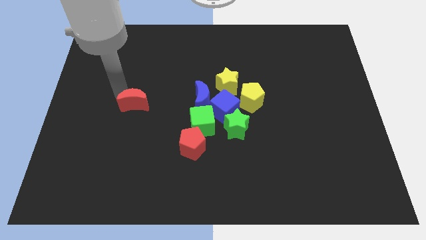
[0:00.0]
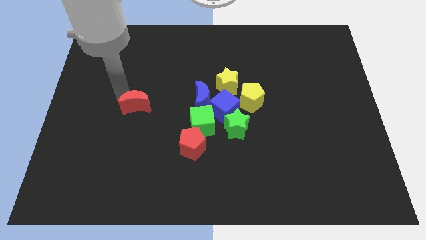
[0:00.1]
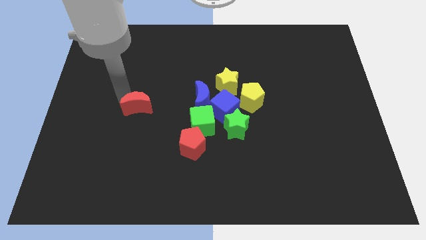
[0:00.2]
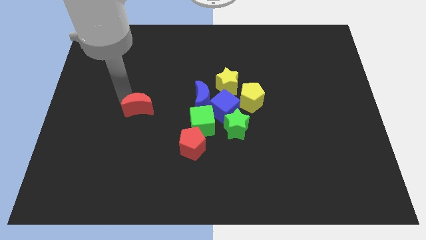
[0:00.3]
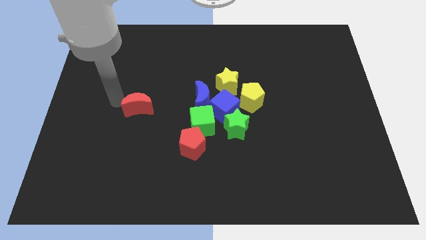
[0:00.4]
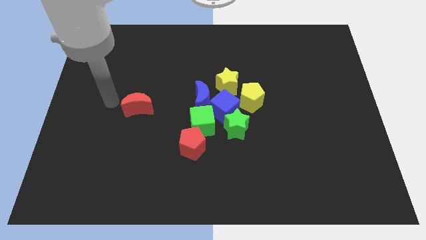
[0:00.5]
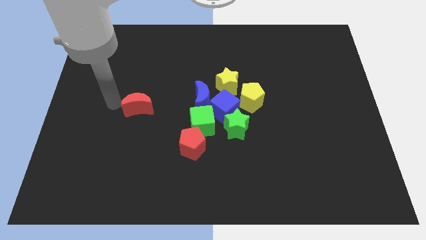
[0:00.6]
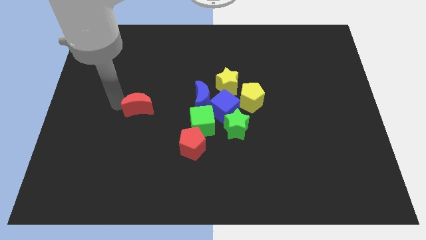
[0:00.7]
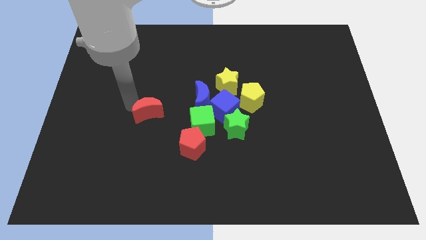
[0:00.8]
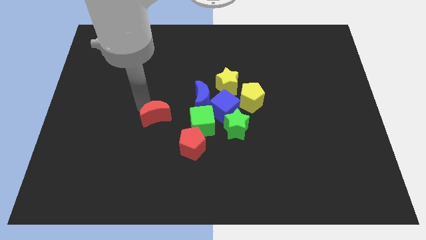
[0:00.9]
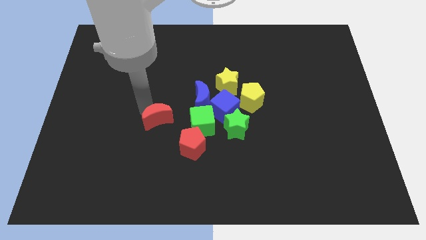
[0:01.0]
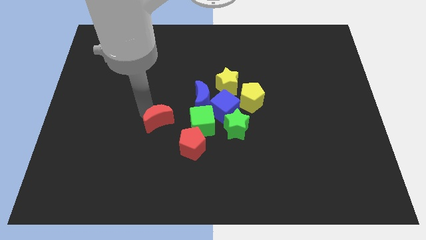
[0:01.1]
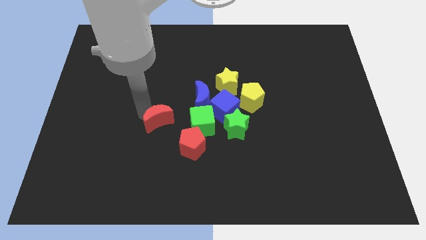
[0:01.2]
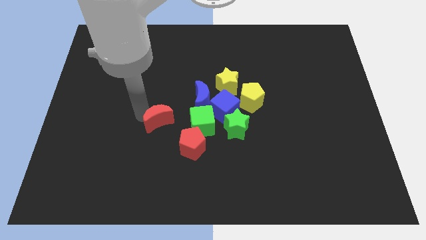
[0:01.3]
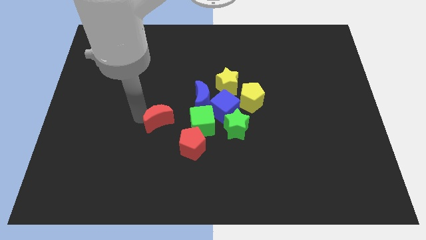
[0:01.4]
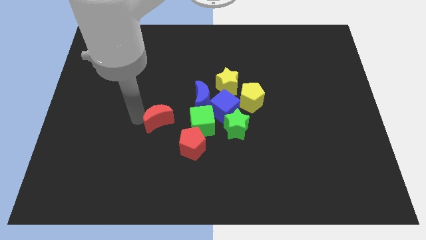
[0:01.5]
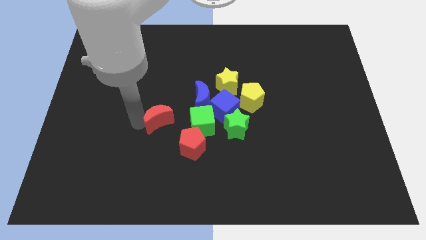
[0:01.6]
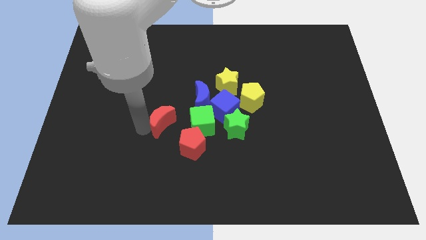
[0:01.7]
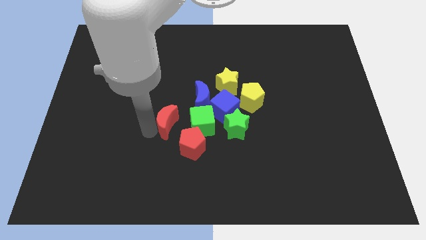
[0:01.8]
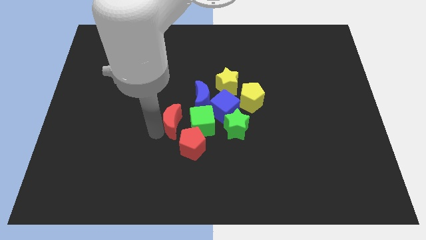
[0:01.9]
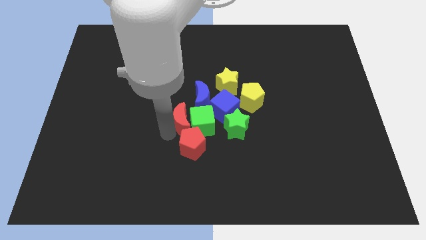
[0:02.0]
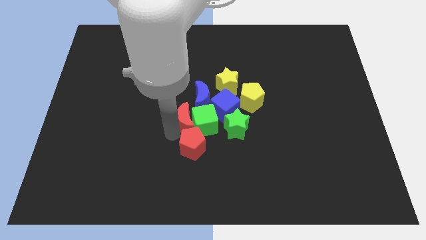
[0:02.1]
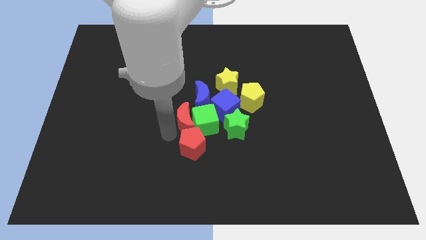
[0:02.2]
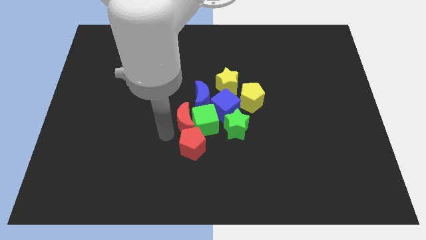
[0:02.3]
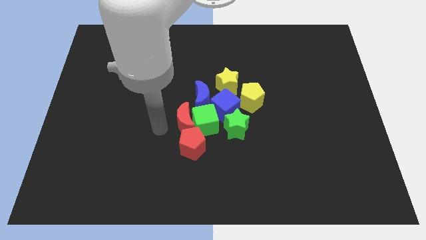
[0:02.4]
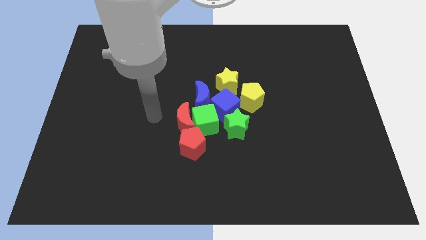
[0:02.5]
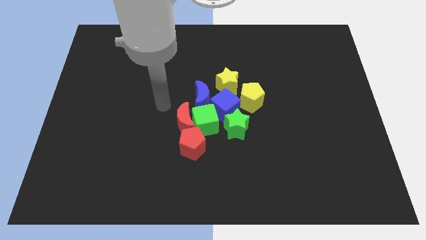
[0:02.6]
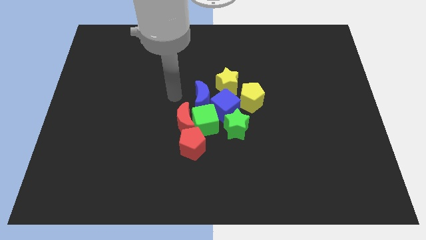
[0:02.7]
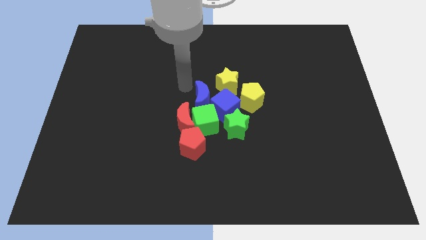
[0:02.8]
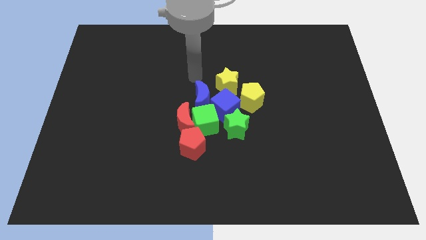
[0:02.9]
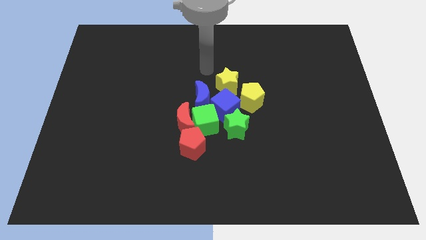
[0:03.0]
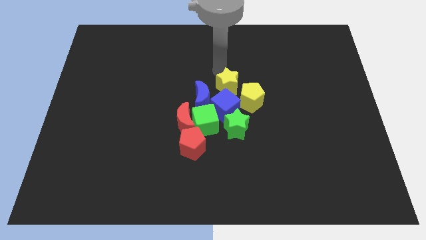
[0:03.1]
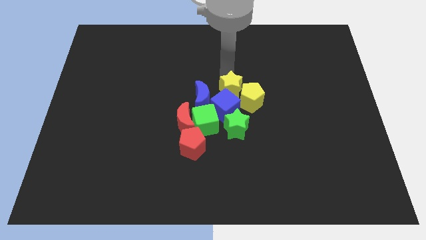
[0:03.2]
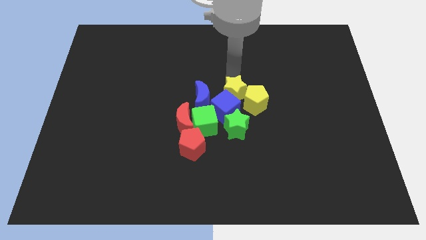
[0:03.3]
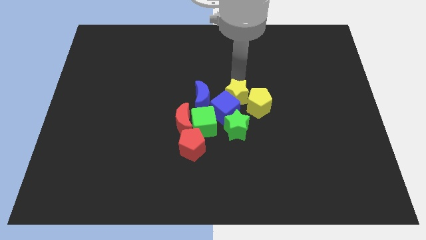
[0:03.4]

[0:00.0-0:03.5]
push red moon into the group of blocks

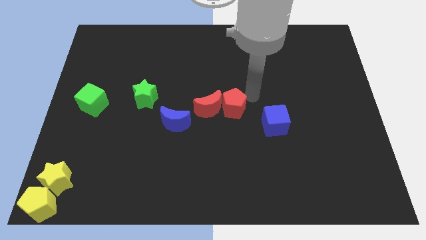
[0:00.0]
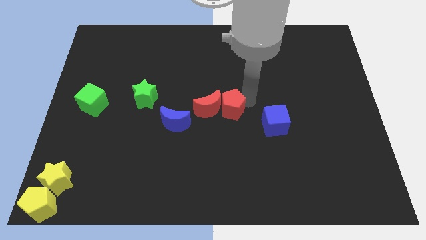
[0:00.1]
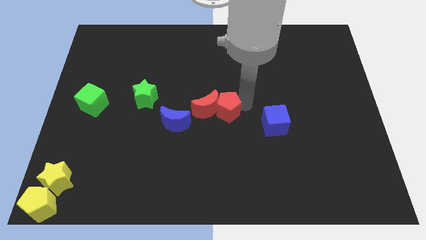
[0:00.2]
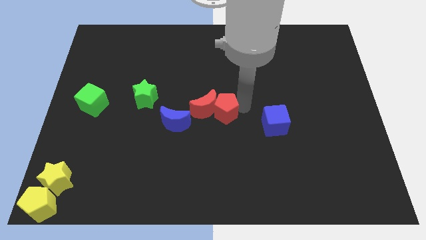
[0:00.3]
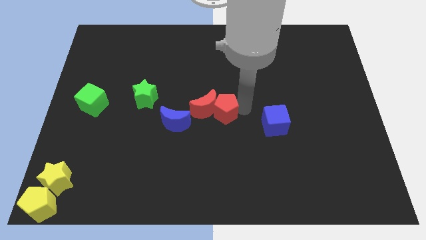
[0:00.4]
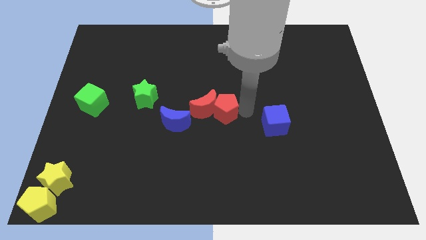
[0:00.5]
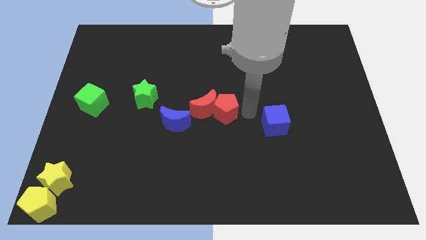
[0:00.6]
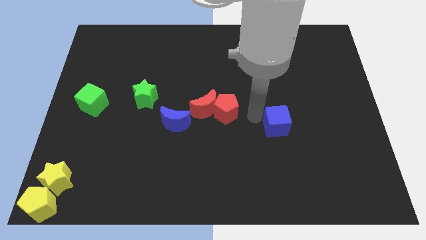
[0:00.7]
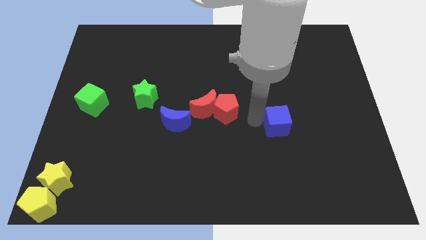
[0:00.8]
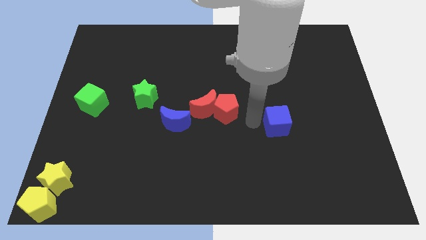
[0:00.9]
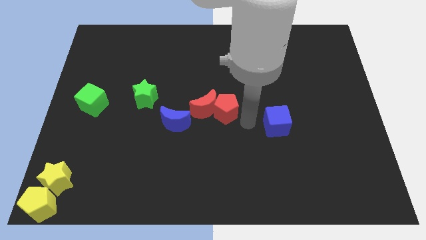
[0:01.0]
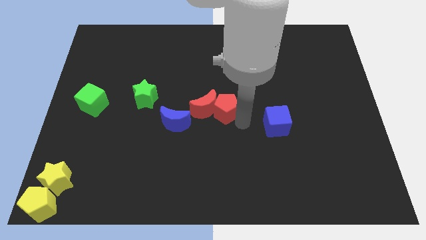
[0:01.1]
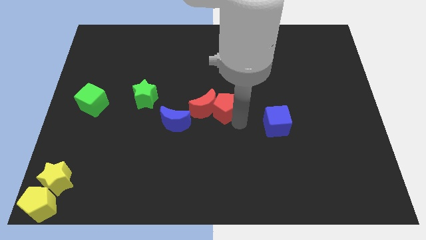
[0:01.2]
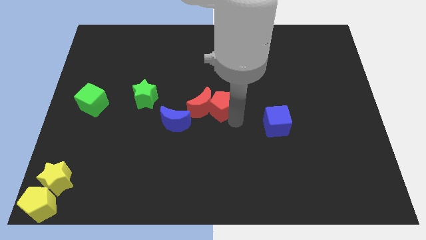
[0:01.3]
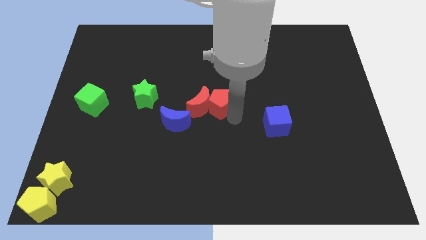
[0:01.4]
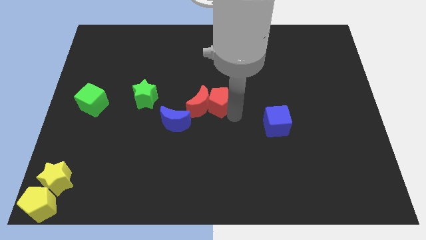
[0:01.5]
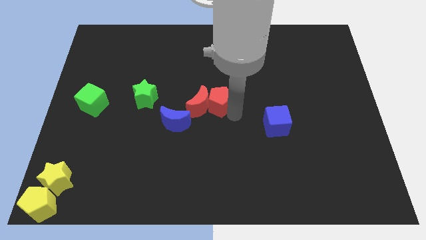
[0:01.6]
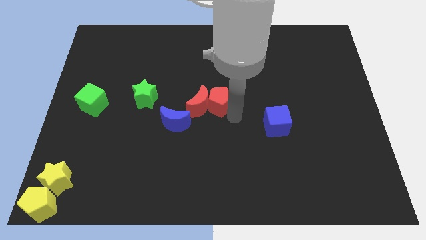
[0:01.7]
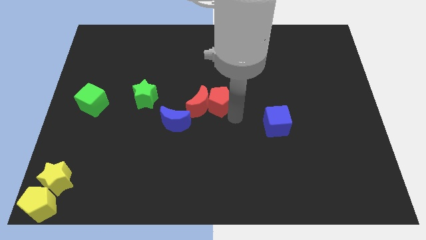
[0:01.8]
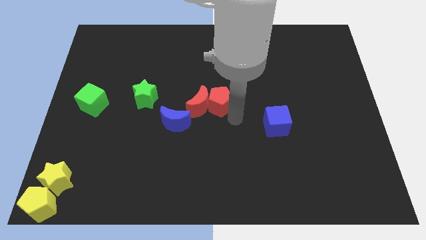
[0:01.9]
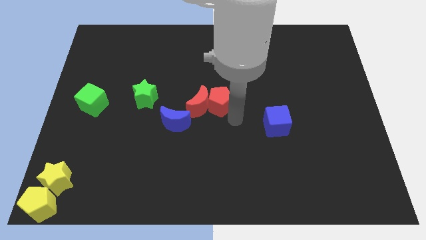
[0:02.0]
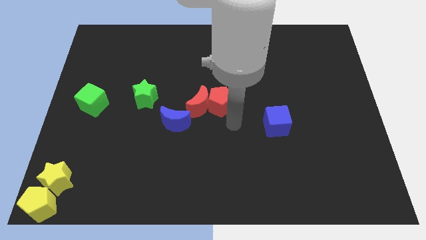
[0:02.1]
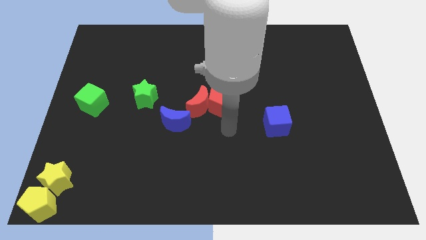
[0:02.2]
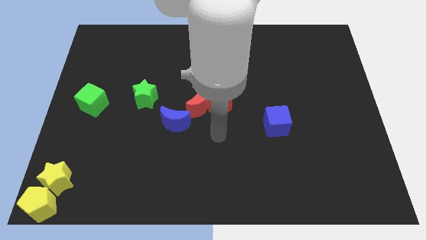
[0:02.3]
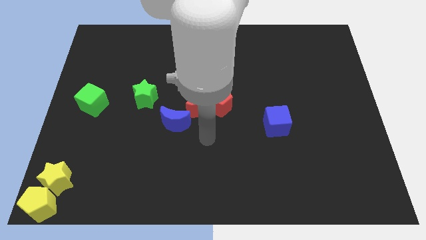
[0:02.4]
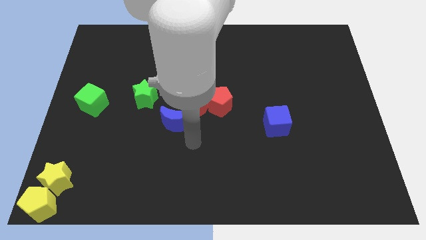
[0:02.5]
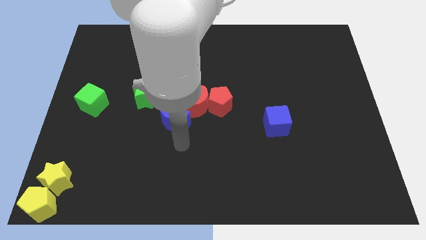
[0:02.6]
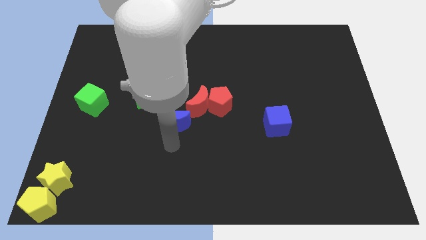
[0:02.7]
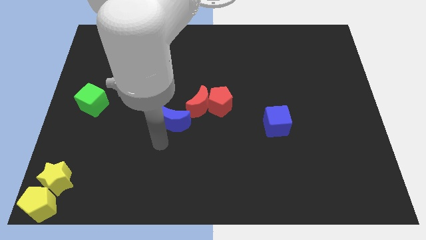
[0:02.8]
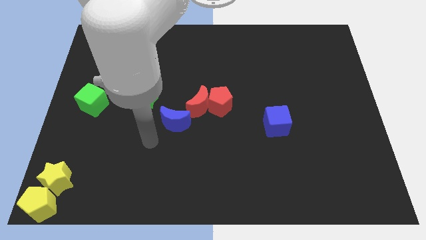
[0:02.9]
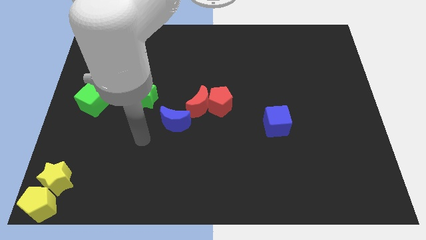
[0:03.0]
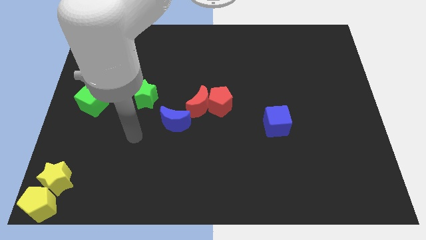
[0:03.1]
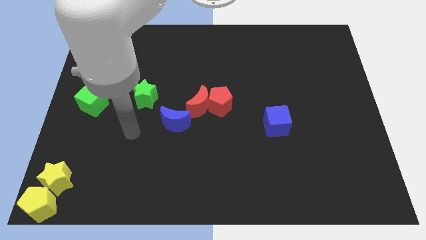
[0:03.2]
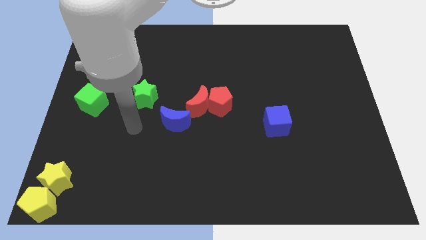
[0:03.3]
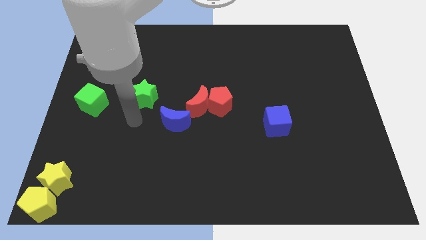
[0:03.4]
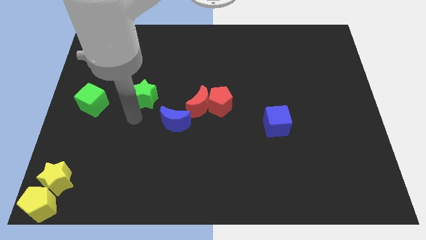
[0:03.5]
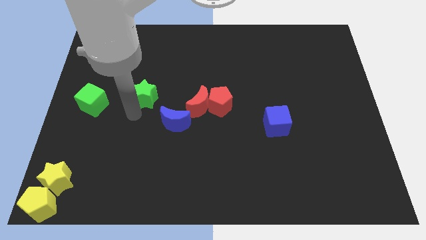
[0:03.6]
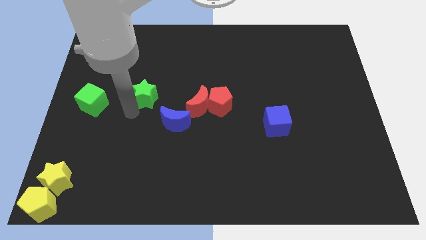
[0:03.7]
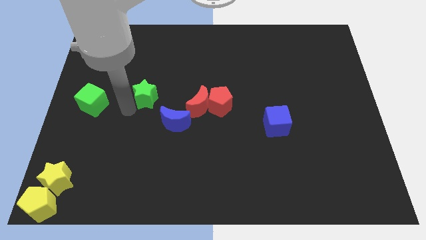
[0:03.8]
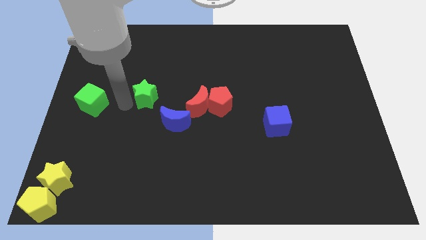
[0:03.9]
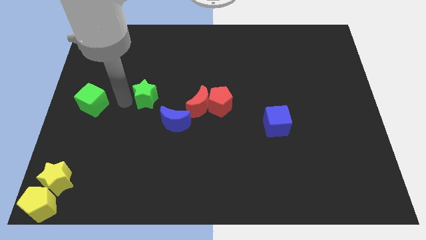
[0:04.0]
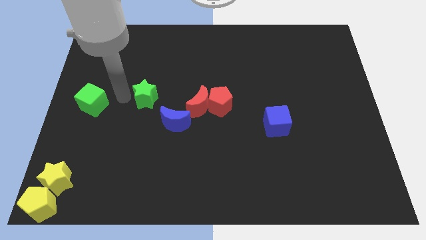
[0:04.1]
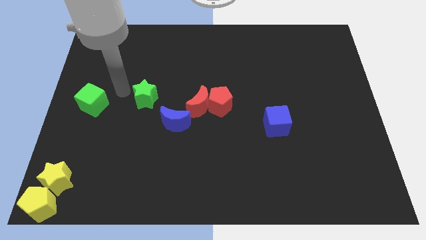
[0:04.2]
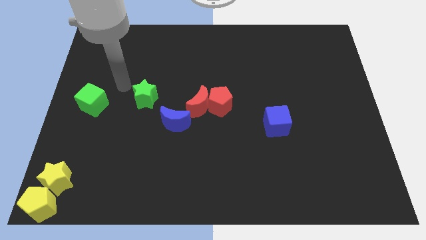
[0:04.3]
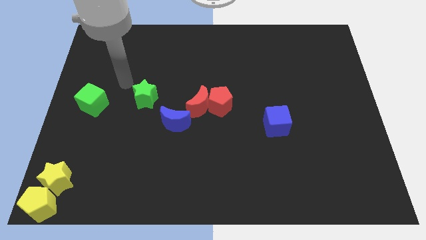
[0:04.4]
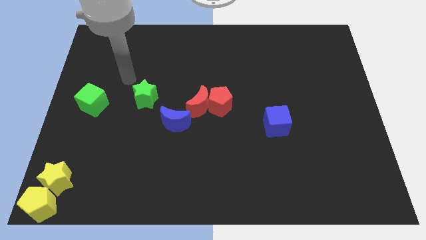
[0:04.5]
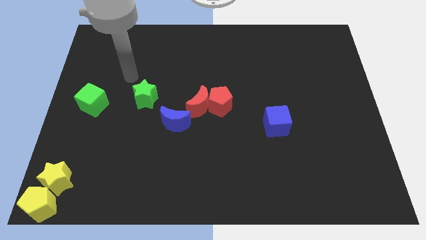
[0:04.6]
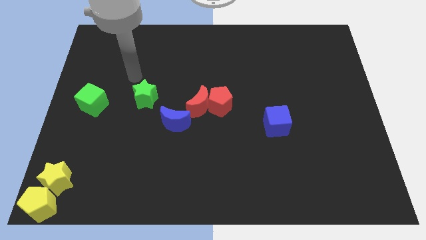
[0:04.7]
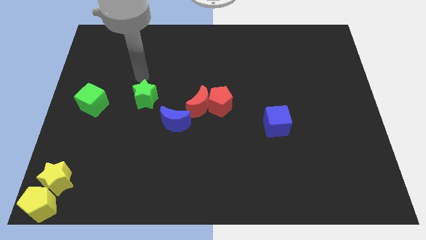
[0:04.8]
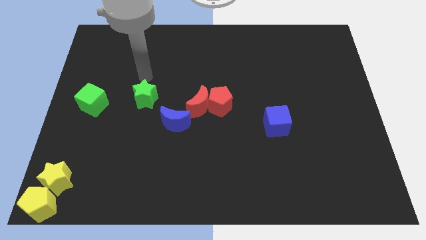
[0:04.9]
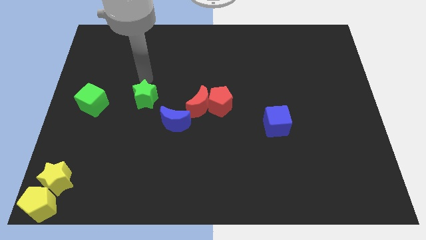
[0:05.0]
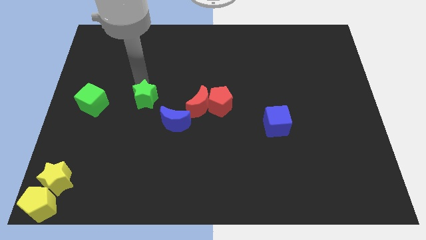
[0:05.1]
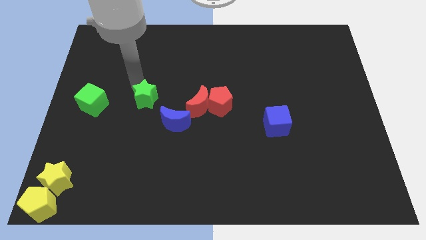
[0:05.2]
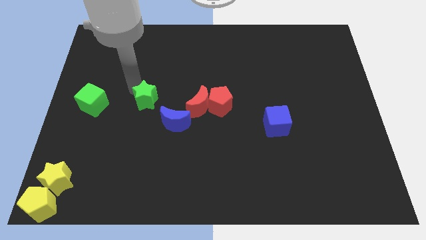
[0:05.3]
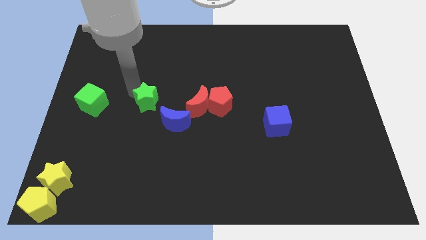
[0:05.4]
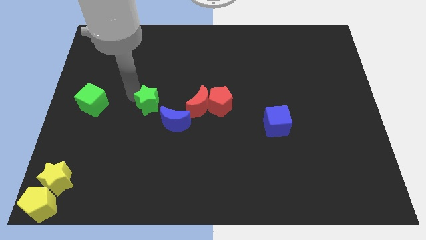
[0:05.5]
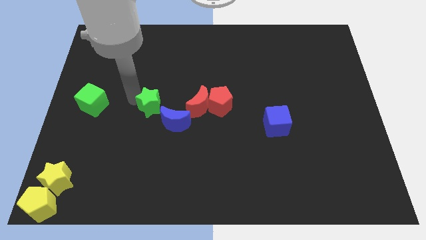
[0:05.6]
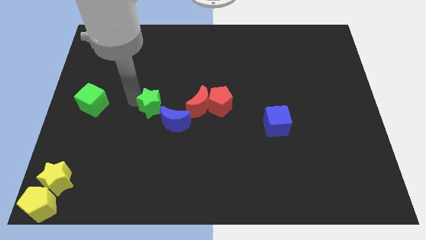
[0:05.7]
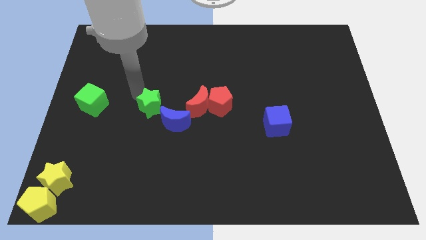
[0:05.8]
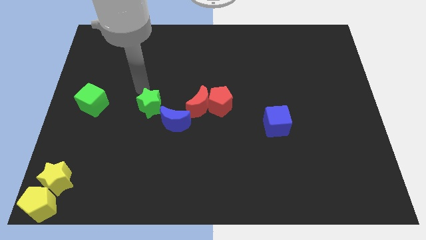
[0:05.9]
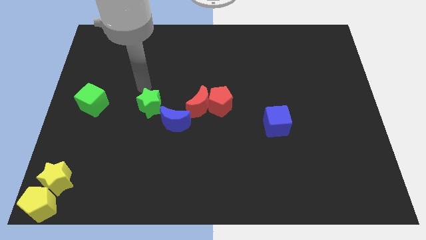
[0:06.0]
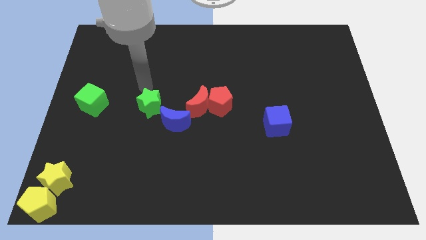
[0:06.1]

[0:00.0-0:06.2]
move the green star towards the blue crescent
